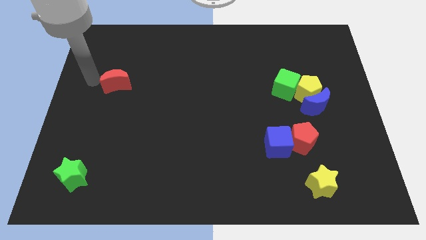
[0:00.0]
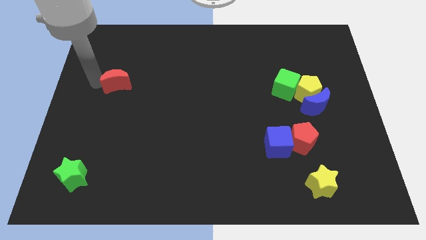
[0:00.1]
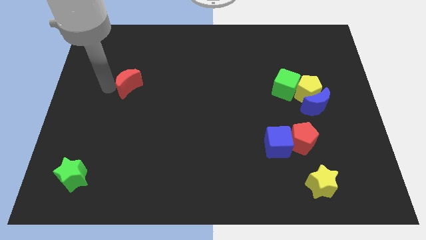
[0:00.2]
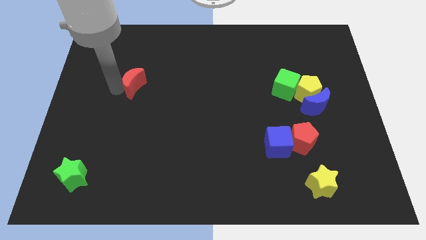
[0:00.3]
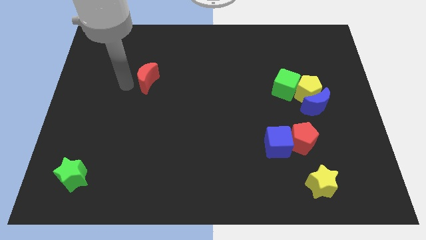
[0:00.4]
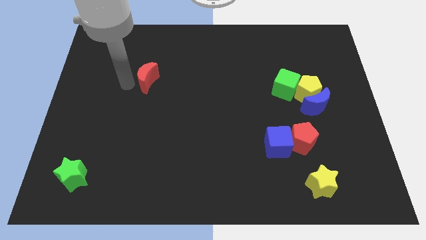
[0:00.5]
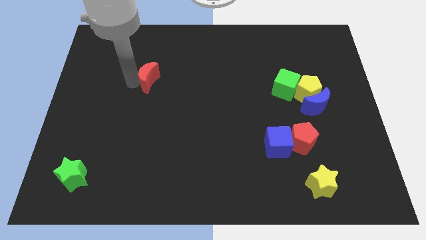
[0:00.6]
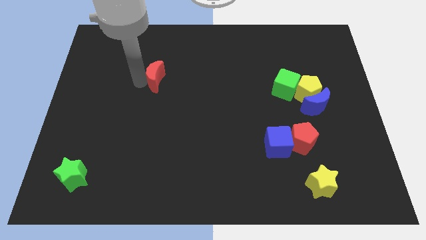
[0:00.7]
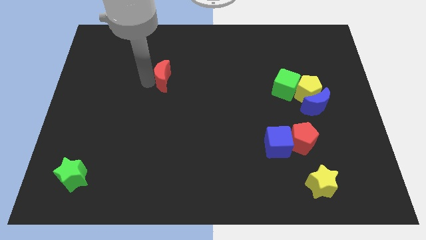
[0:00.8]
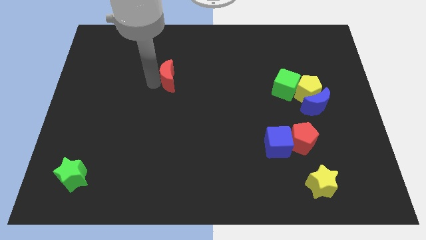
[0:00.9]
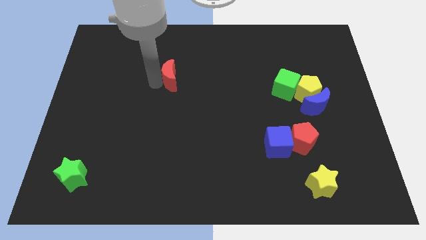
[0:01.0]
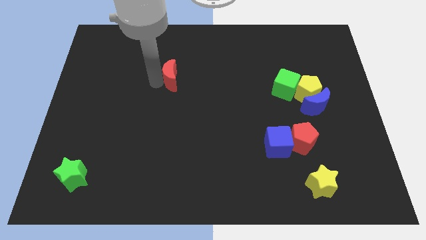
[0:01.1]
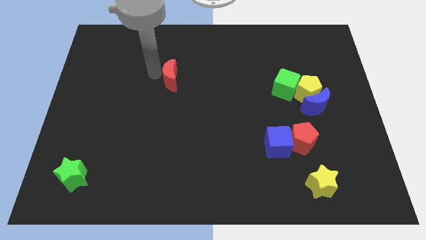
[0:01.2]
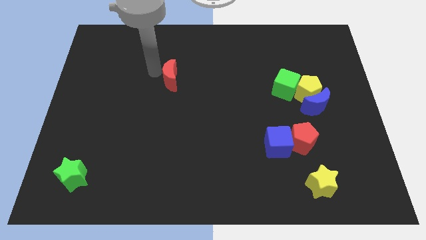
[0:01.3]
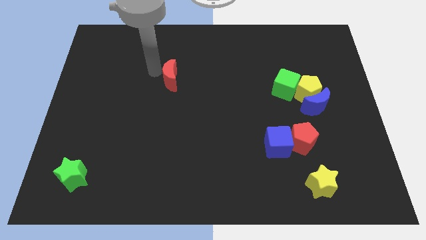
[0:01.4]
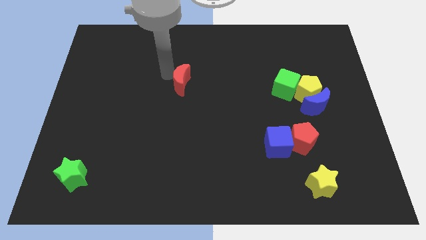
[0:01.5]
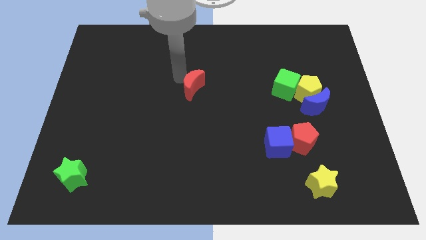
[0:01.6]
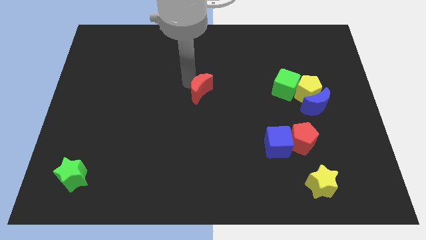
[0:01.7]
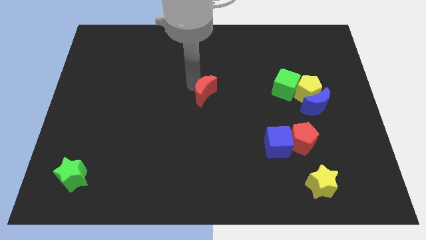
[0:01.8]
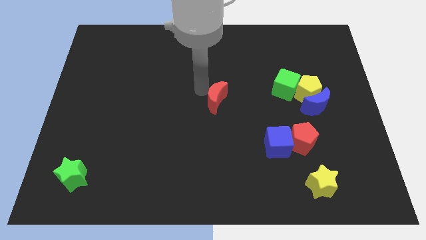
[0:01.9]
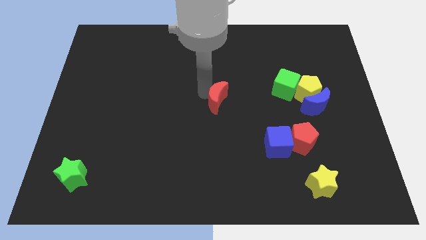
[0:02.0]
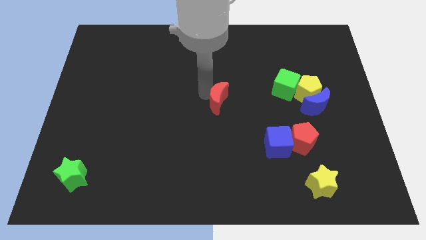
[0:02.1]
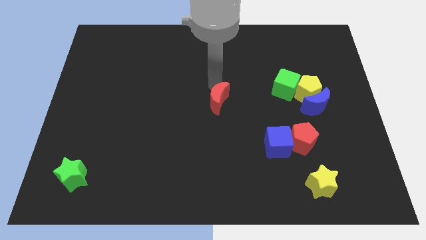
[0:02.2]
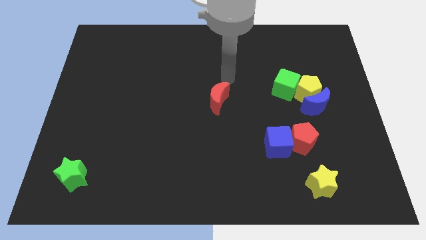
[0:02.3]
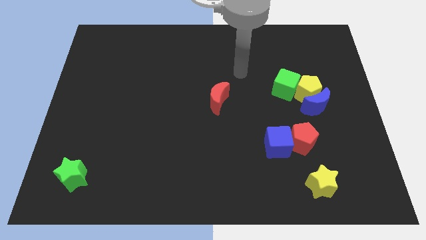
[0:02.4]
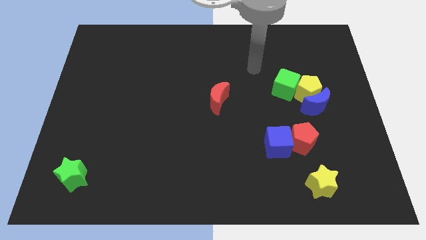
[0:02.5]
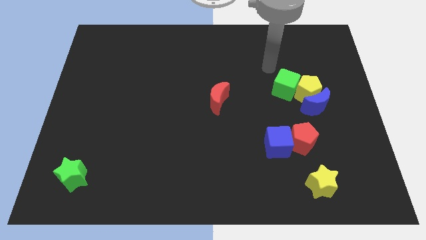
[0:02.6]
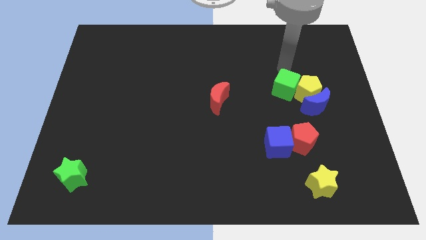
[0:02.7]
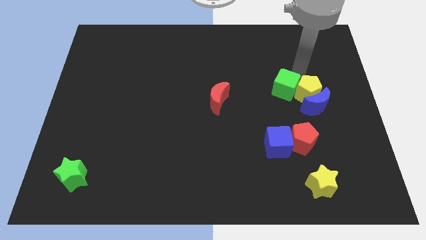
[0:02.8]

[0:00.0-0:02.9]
move the red crescent to the center of the board

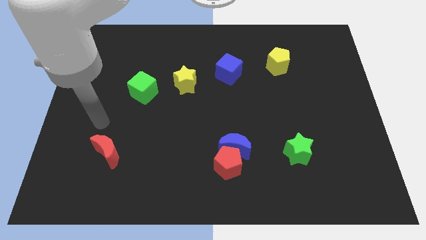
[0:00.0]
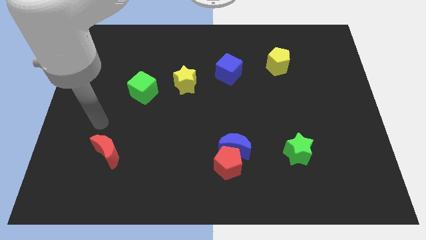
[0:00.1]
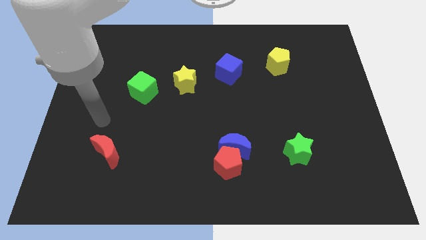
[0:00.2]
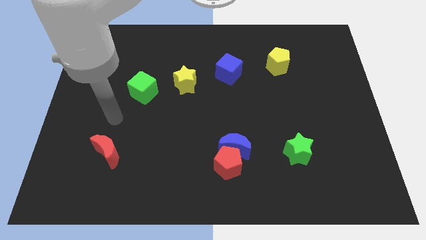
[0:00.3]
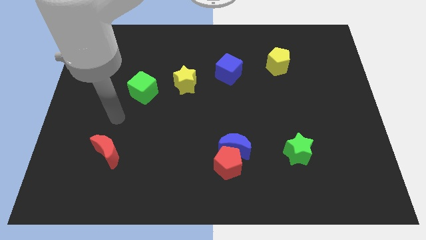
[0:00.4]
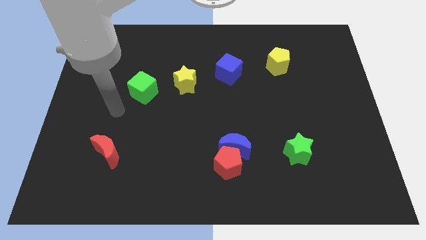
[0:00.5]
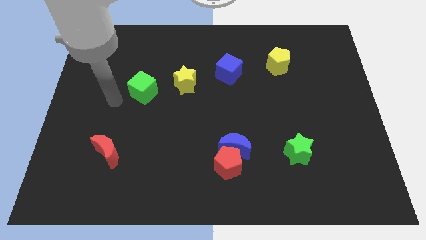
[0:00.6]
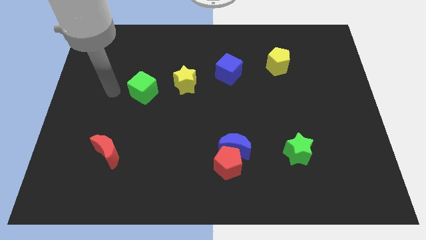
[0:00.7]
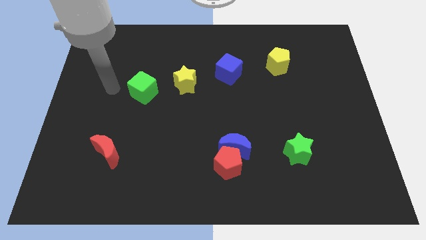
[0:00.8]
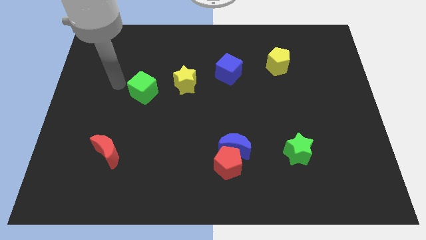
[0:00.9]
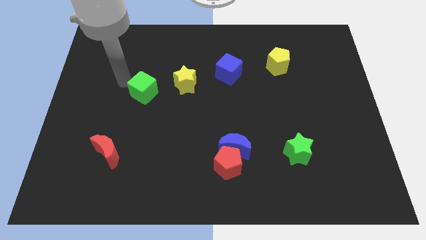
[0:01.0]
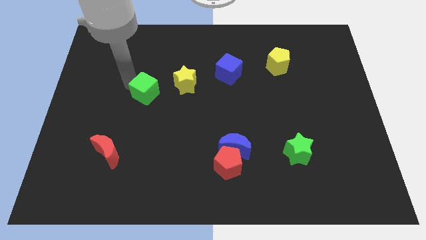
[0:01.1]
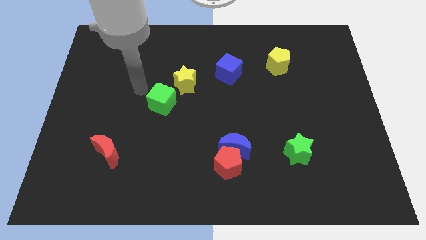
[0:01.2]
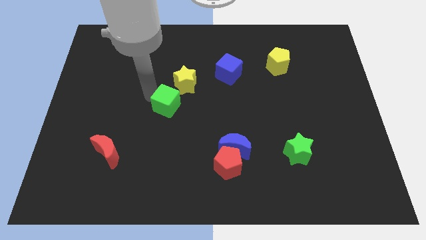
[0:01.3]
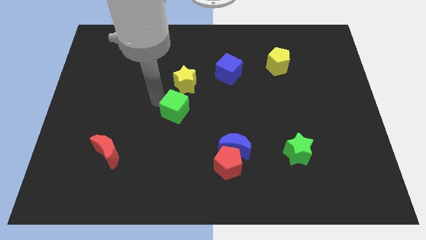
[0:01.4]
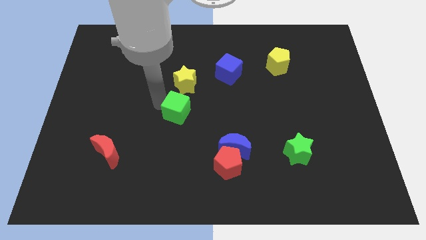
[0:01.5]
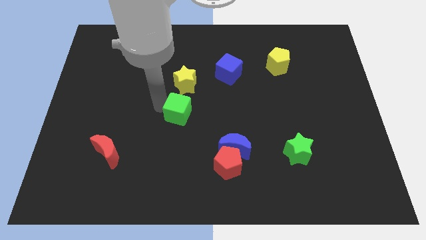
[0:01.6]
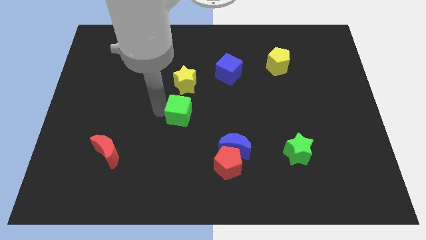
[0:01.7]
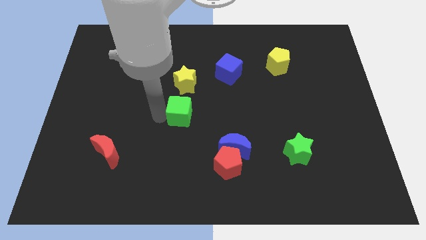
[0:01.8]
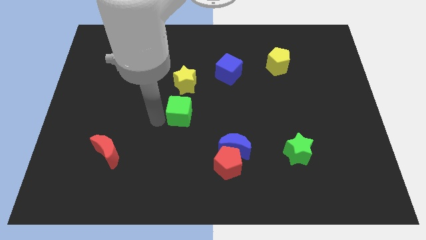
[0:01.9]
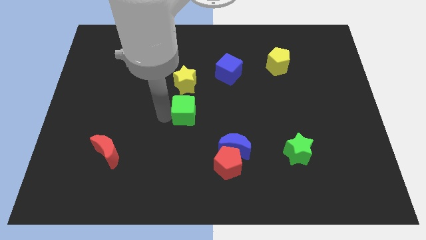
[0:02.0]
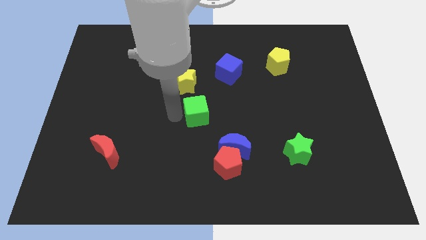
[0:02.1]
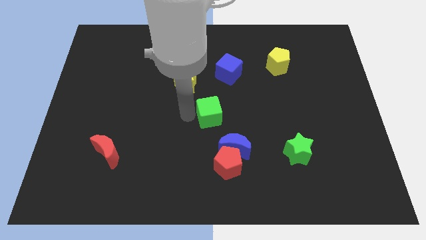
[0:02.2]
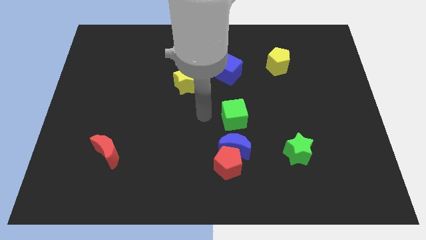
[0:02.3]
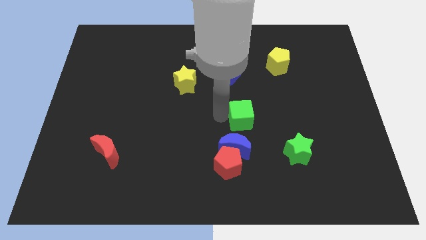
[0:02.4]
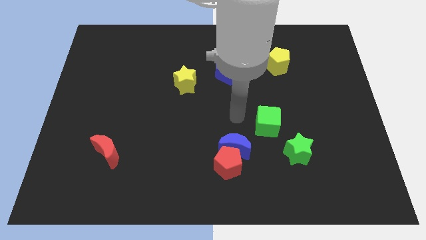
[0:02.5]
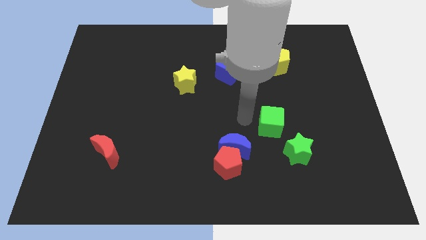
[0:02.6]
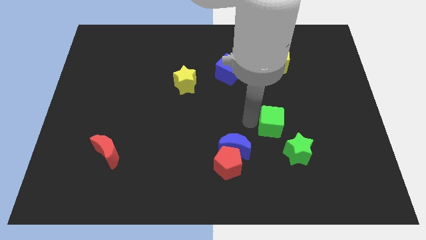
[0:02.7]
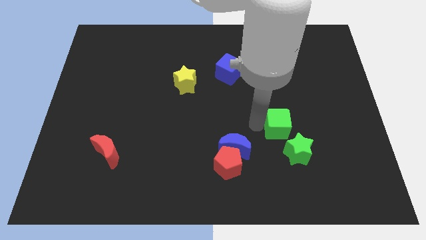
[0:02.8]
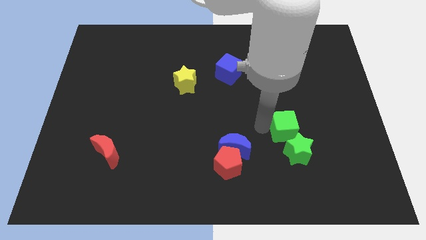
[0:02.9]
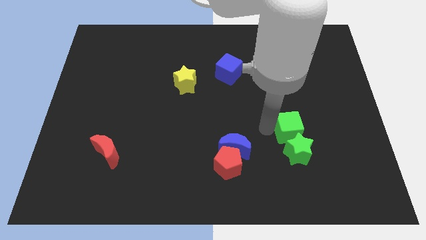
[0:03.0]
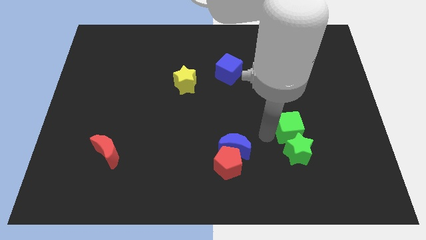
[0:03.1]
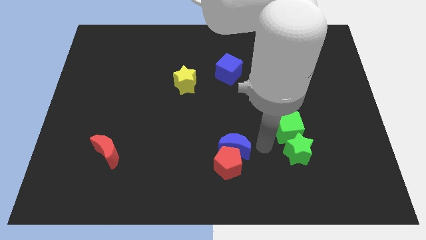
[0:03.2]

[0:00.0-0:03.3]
take the green cube close to the green star

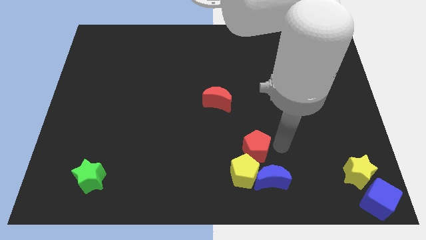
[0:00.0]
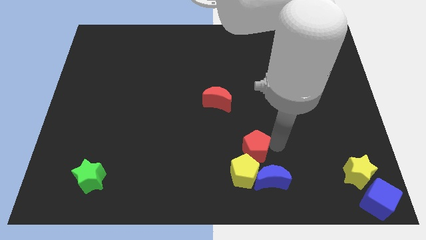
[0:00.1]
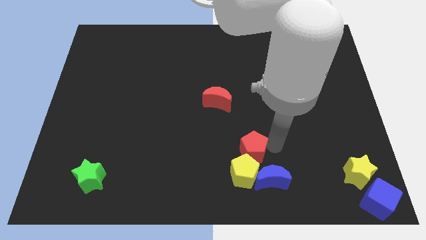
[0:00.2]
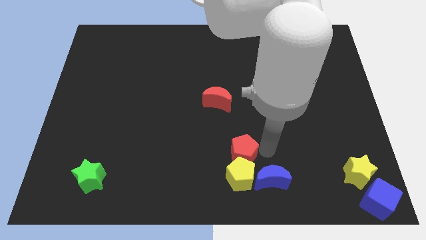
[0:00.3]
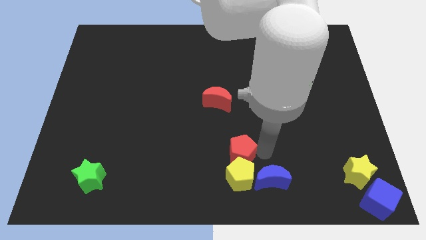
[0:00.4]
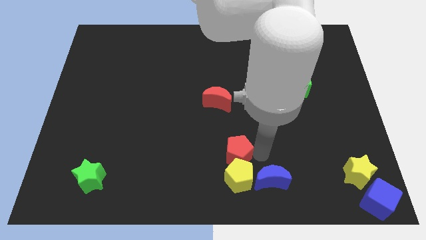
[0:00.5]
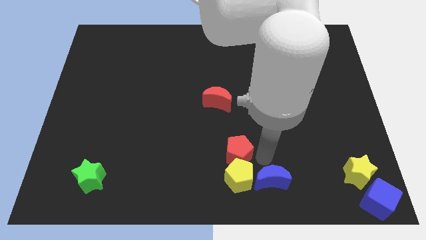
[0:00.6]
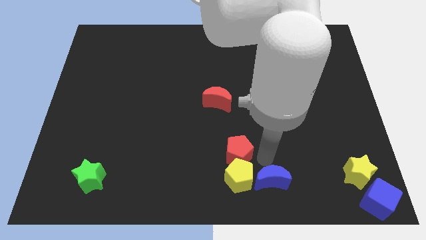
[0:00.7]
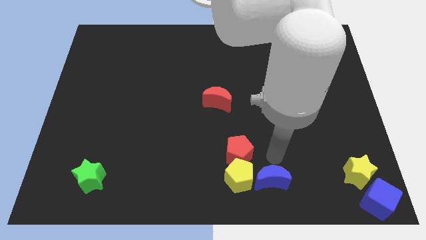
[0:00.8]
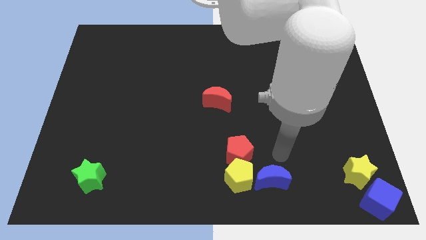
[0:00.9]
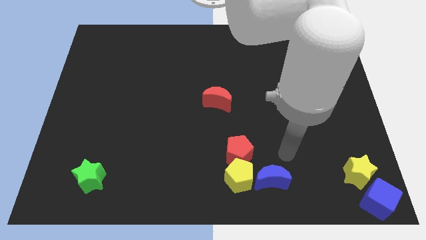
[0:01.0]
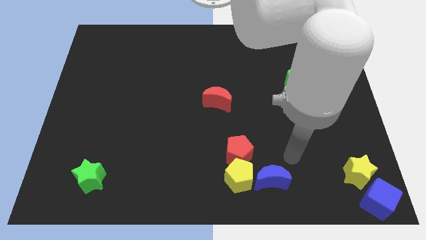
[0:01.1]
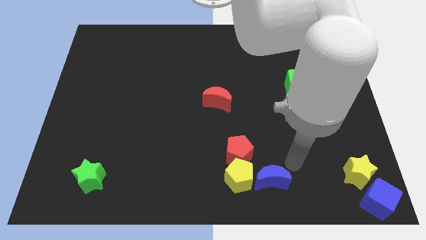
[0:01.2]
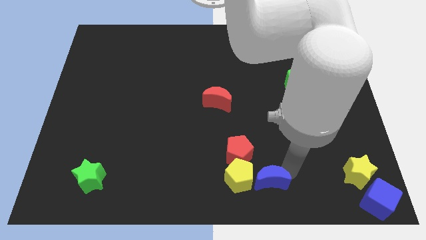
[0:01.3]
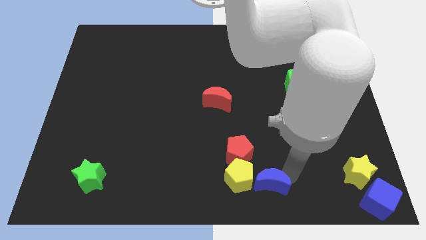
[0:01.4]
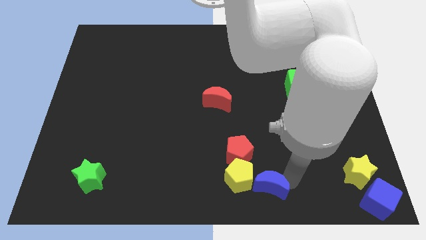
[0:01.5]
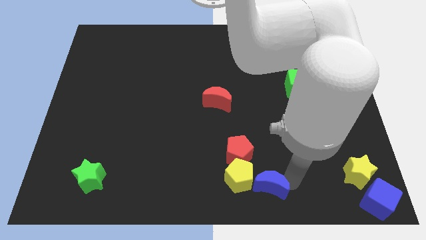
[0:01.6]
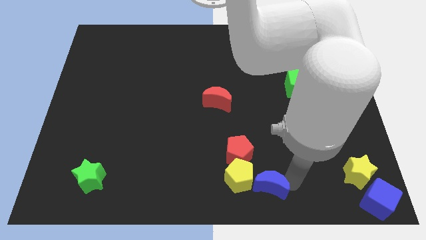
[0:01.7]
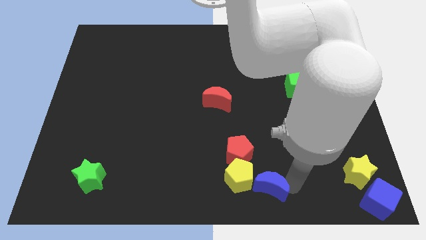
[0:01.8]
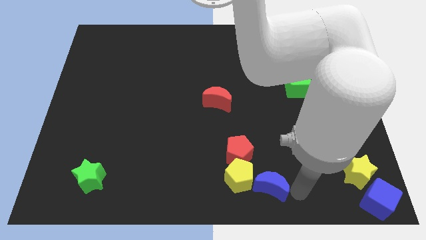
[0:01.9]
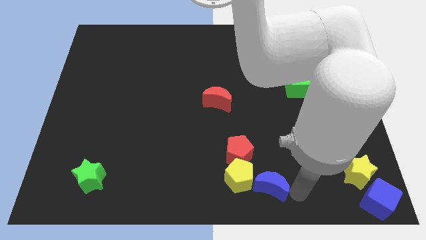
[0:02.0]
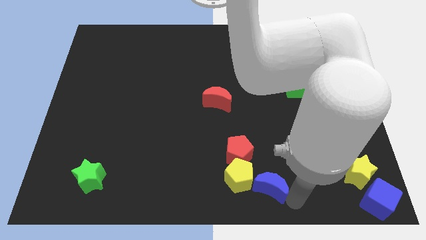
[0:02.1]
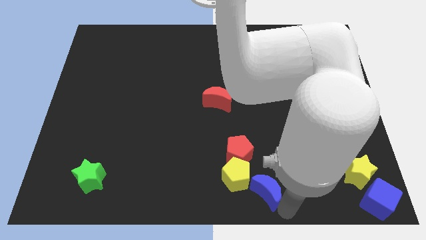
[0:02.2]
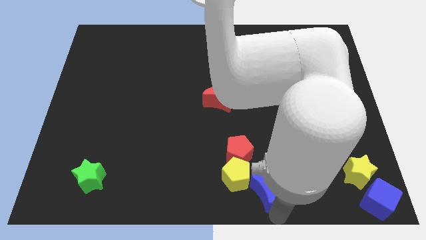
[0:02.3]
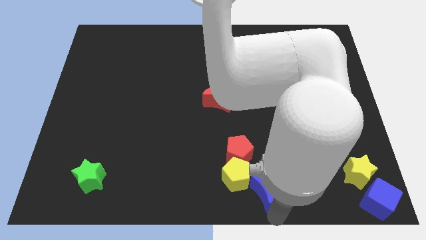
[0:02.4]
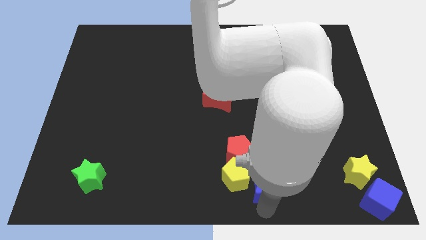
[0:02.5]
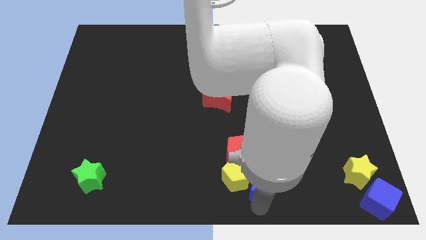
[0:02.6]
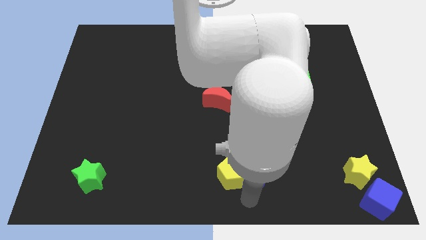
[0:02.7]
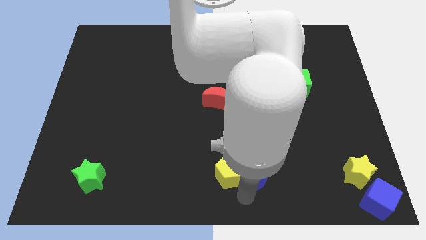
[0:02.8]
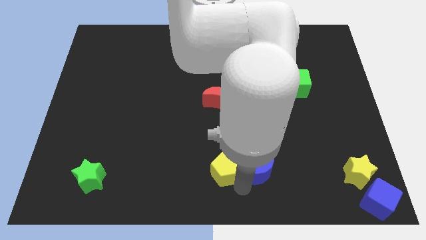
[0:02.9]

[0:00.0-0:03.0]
push the crescent into the yellow pentagon
